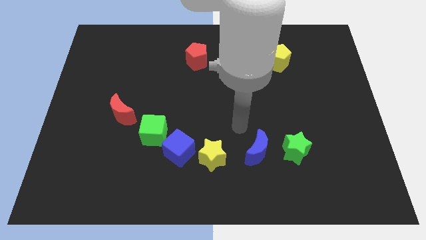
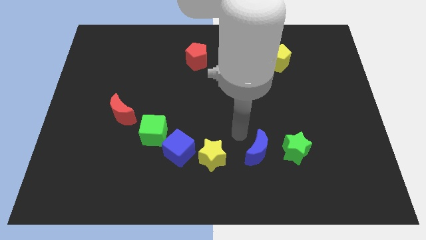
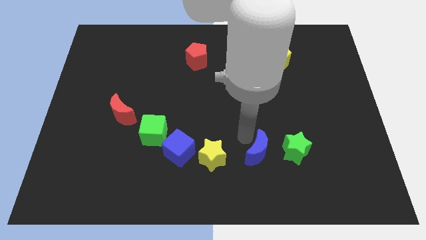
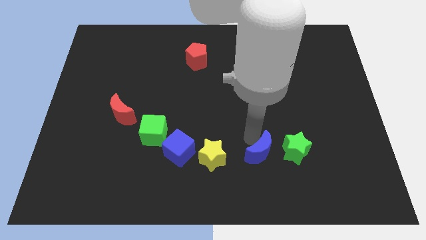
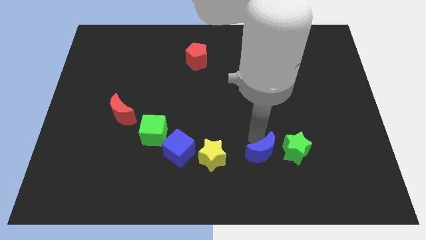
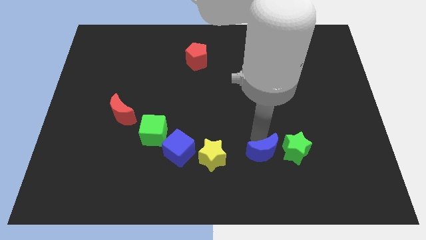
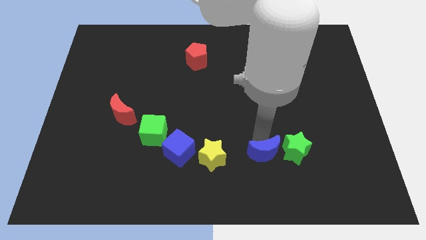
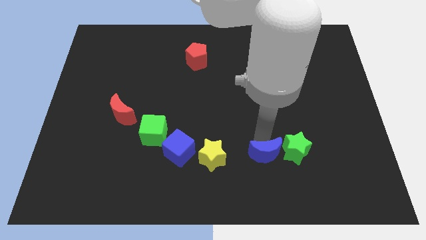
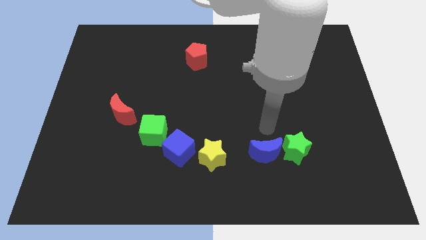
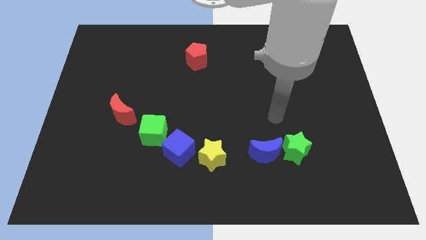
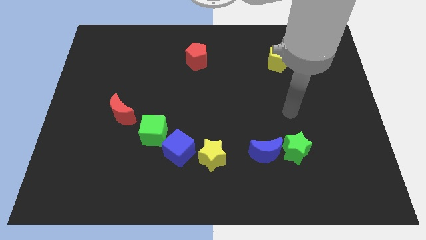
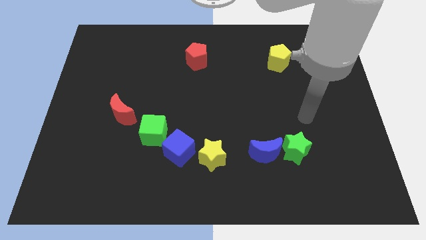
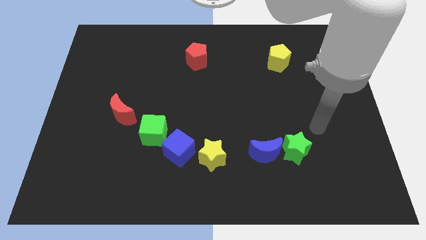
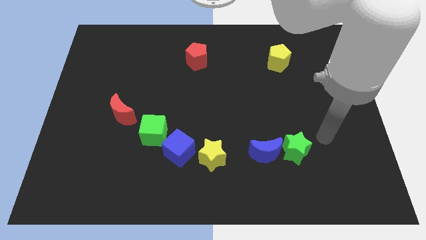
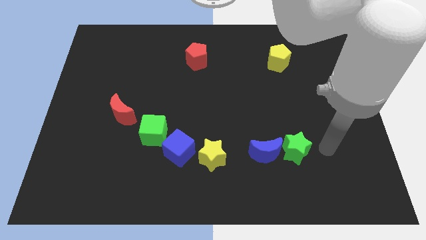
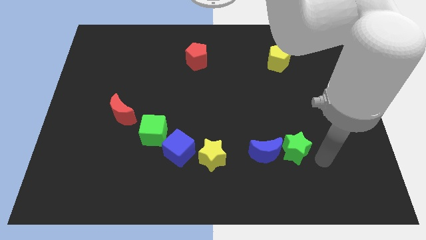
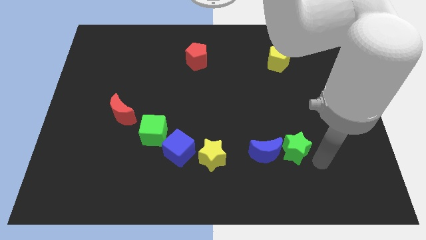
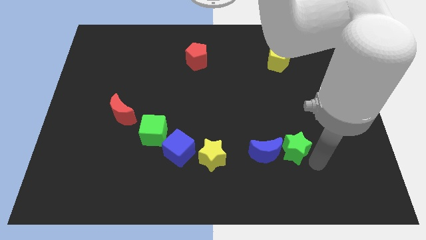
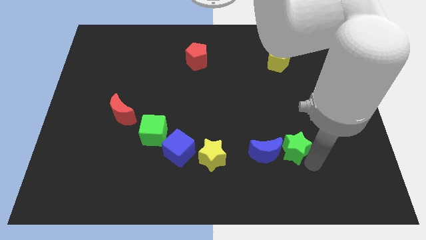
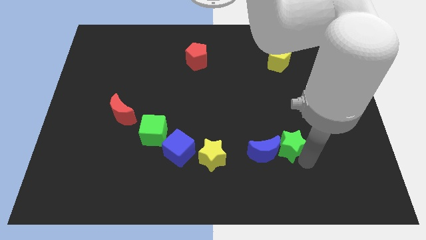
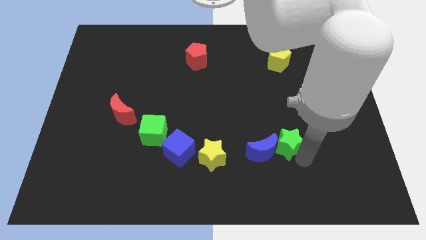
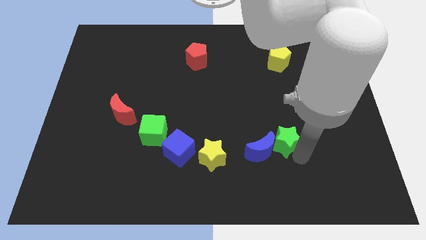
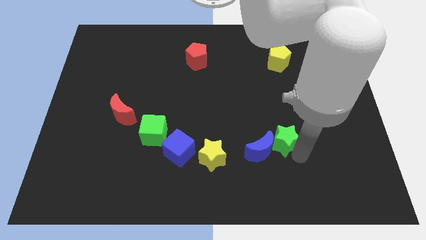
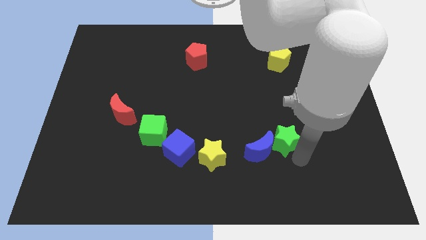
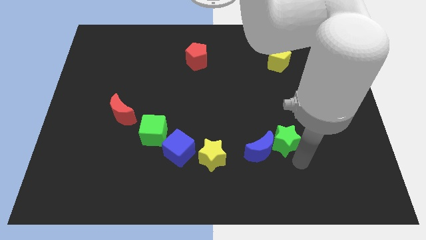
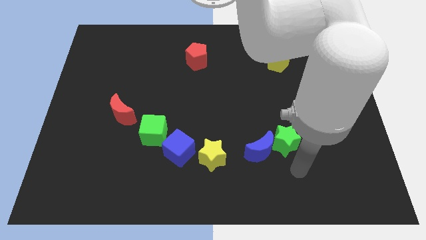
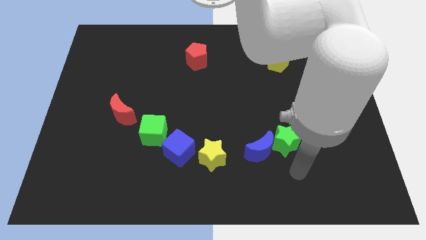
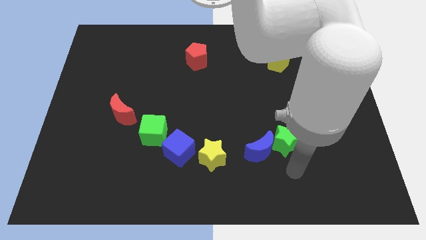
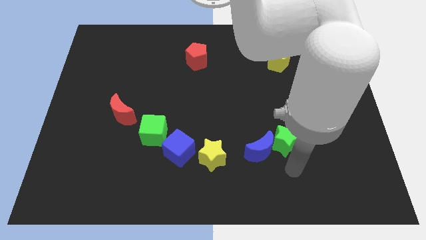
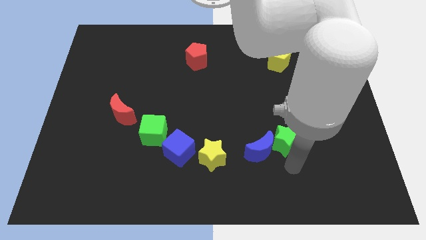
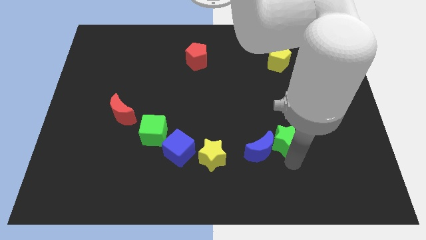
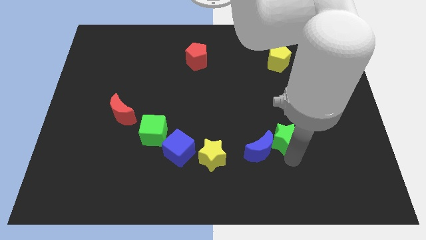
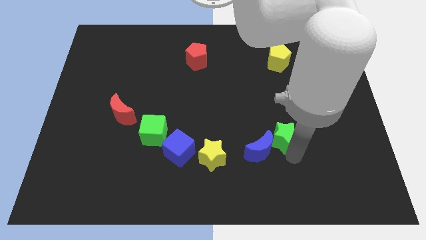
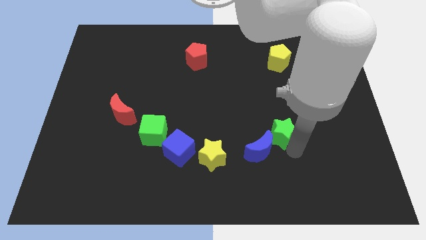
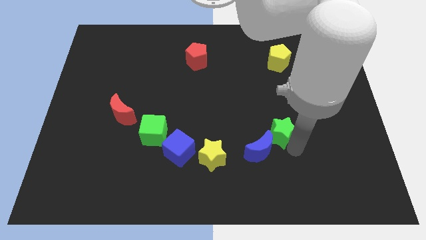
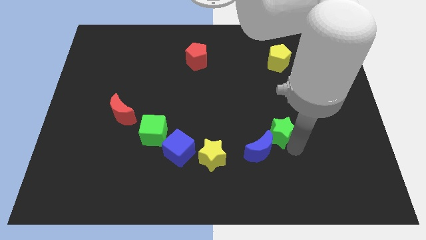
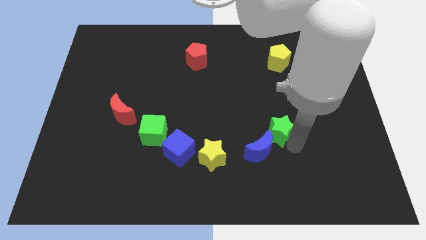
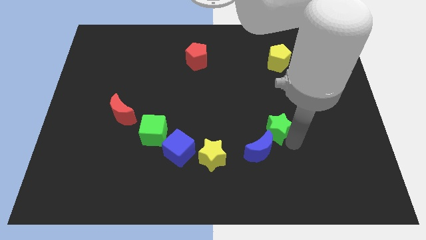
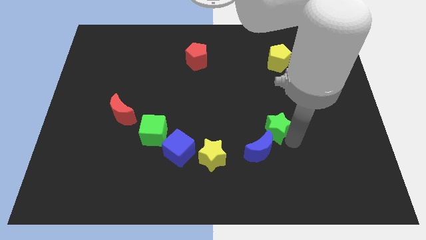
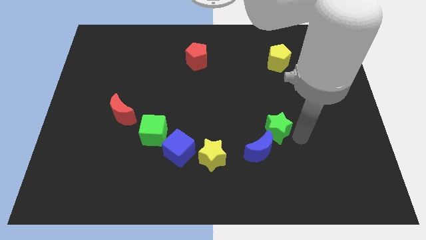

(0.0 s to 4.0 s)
place the green star diagonally above the top right side of the blue crescent

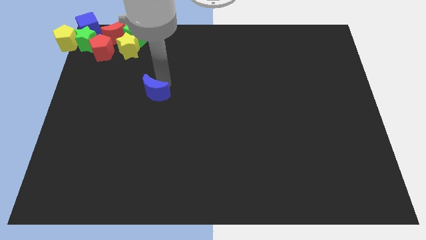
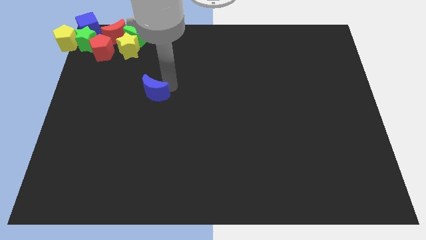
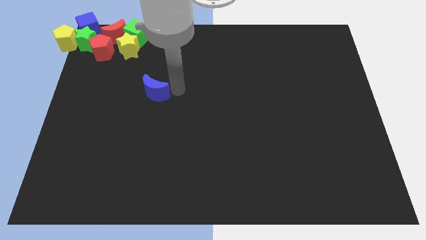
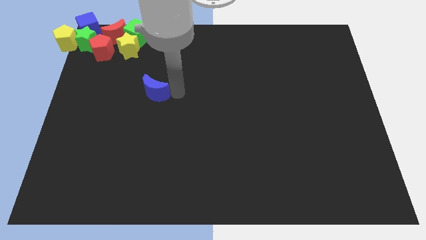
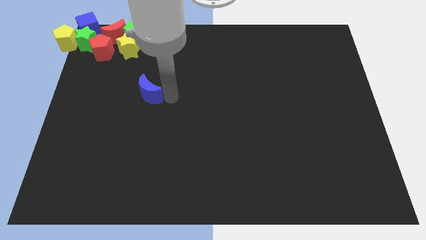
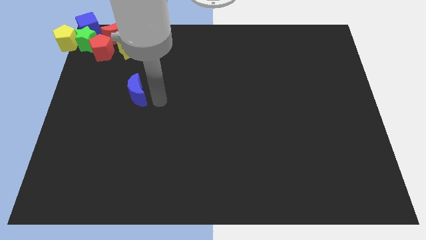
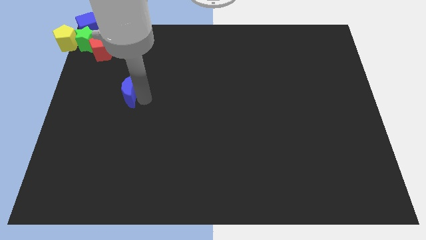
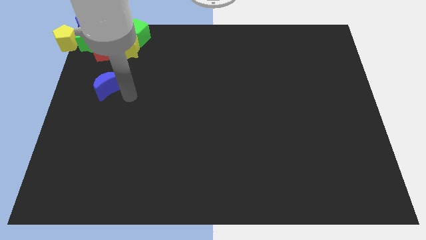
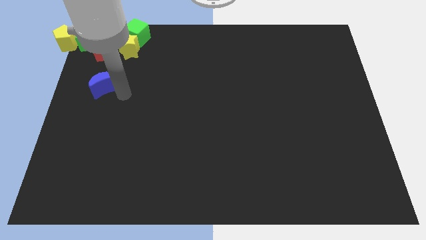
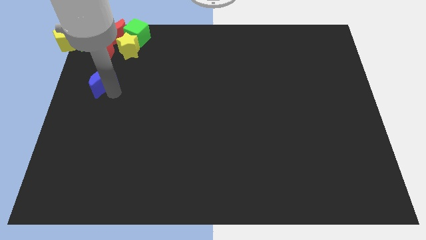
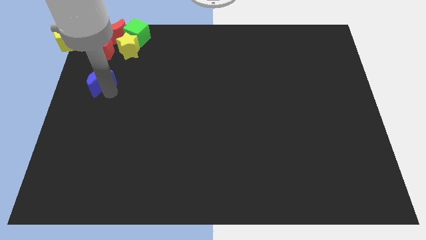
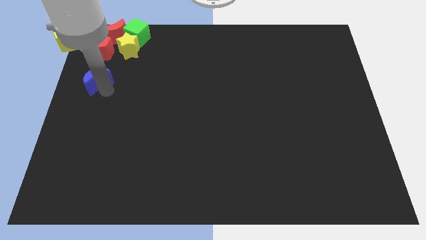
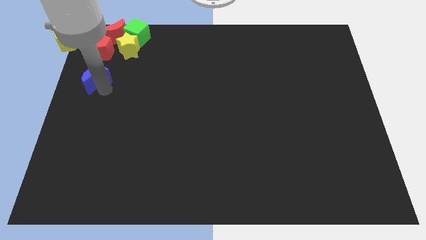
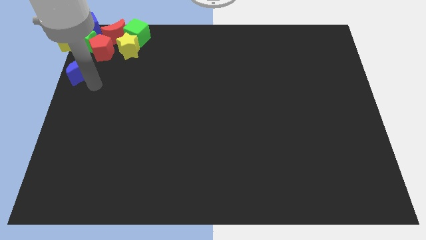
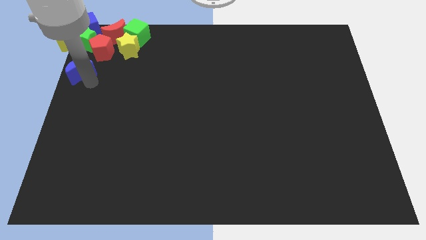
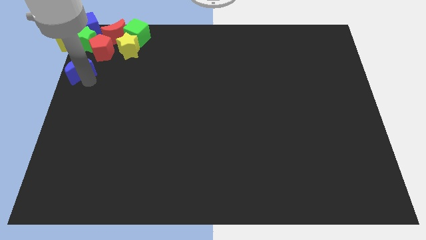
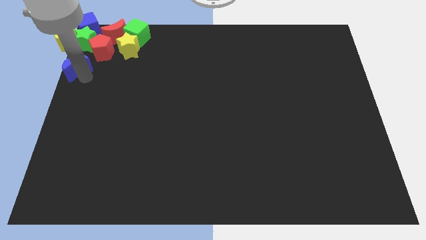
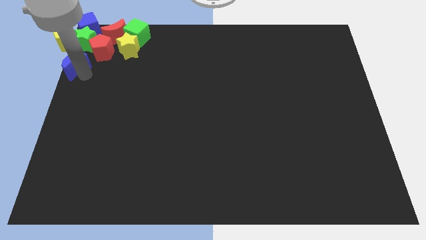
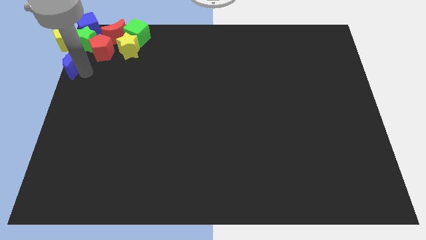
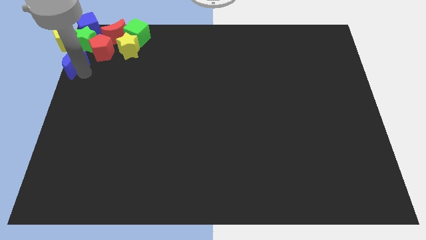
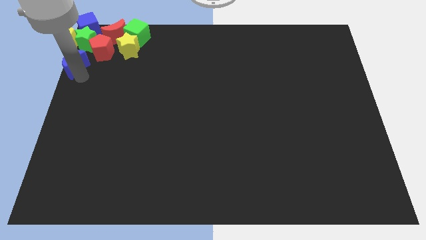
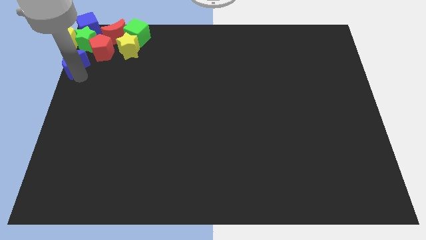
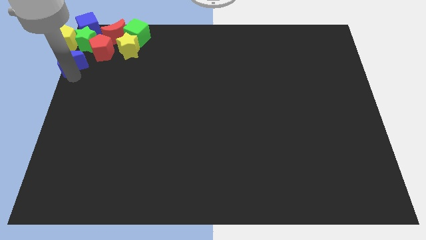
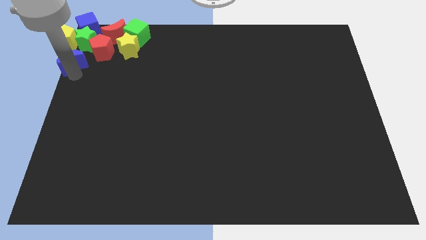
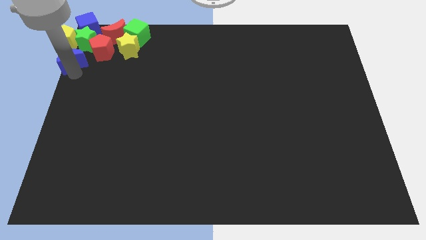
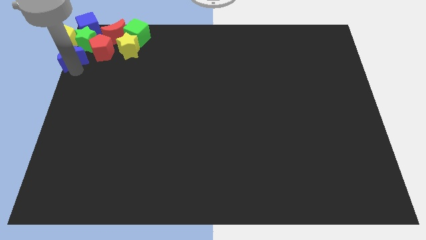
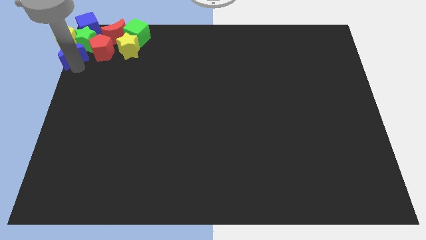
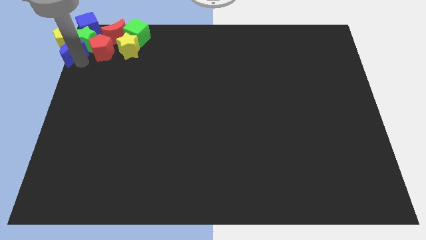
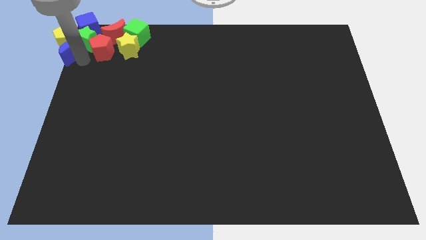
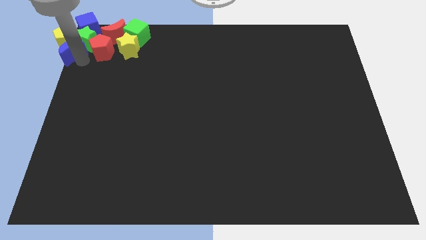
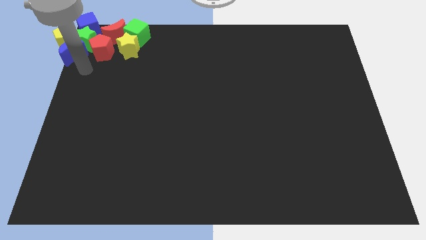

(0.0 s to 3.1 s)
push the blue moon to the group of blocks

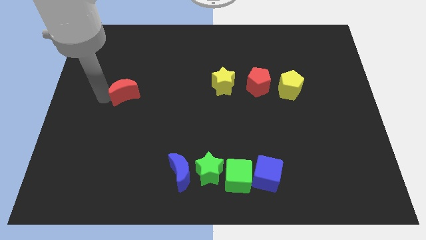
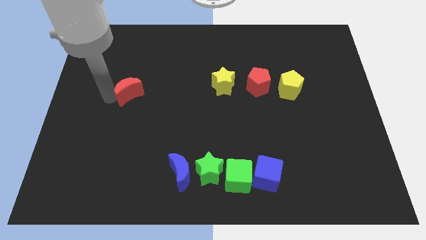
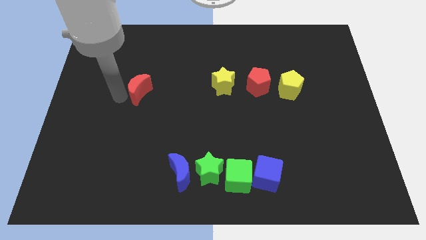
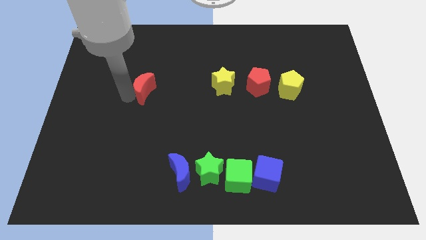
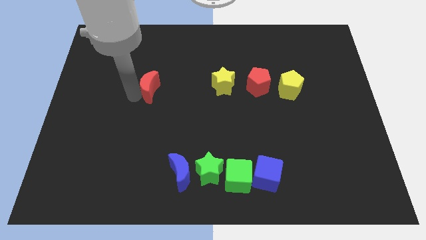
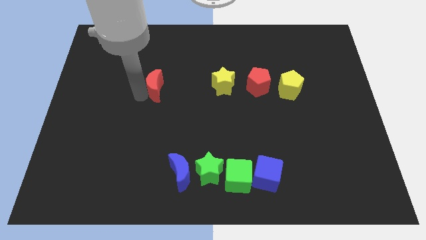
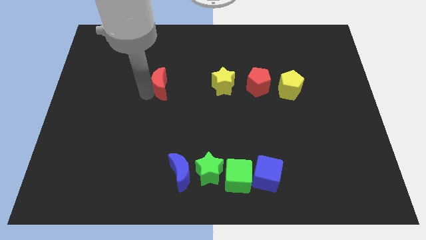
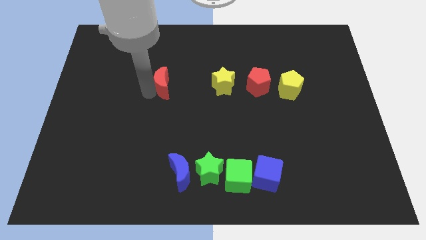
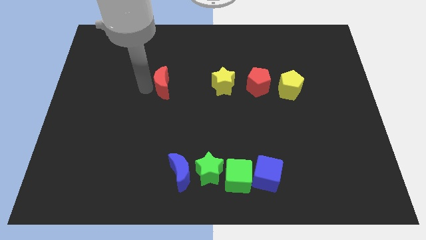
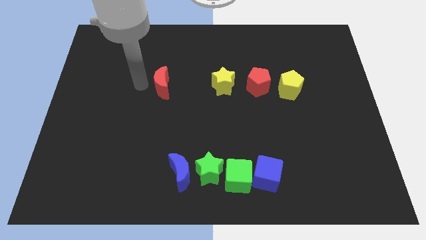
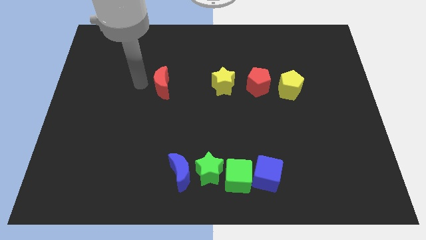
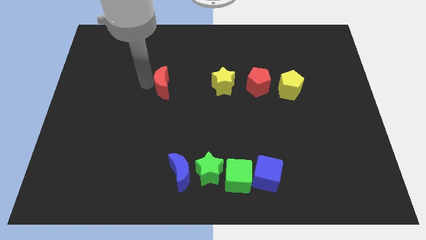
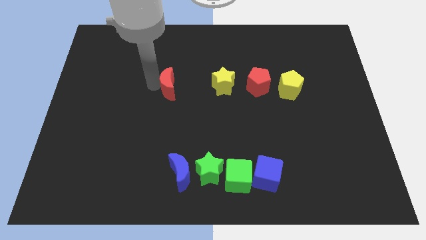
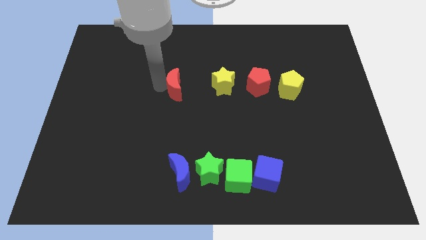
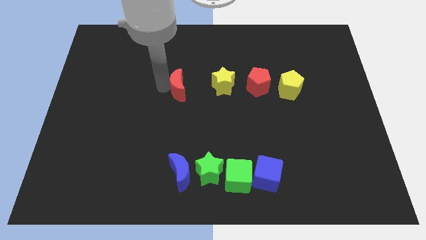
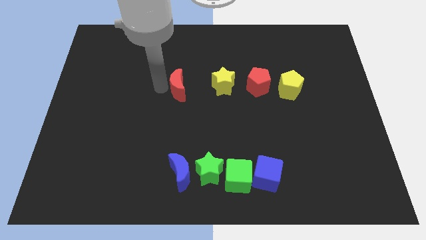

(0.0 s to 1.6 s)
place the red crescent above the blue crescent
